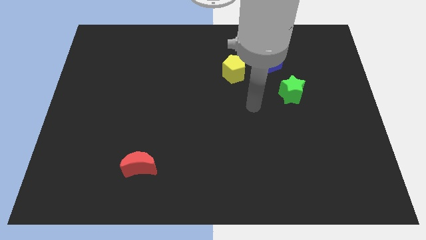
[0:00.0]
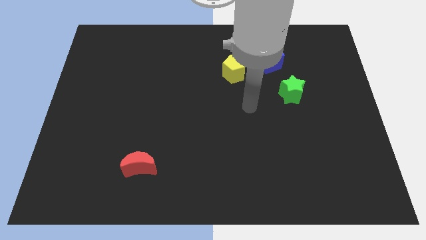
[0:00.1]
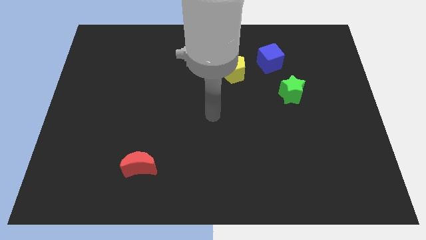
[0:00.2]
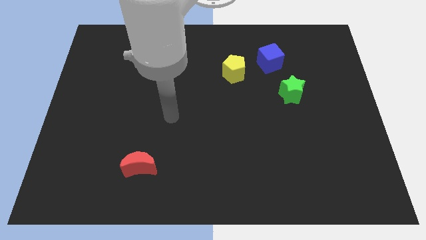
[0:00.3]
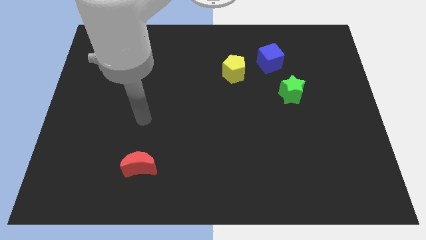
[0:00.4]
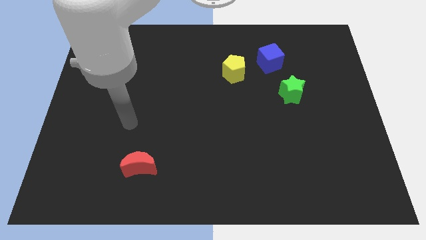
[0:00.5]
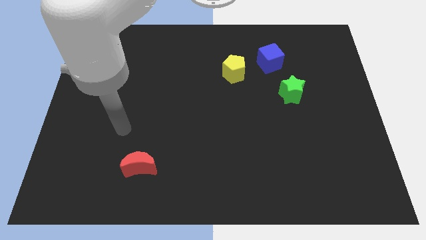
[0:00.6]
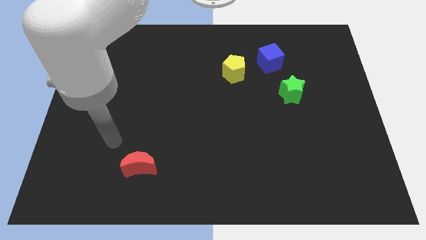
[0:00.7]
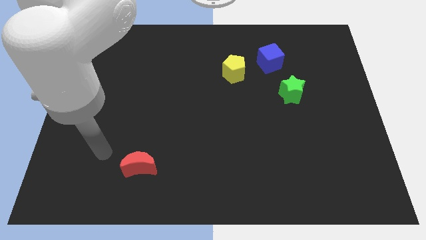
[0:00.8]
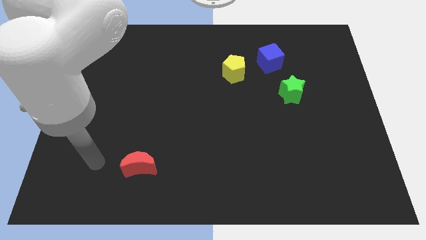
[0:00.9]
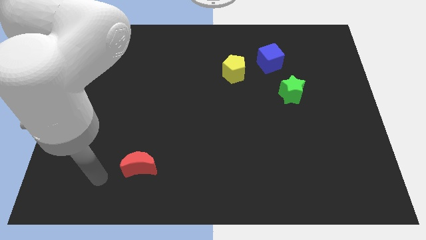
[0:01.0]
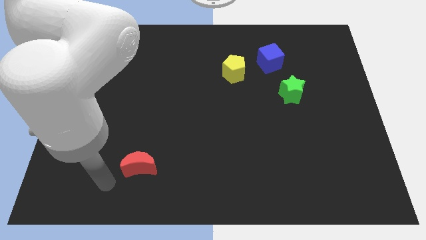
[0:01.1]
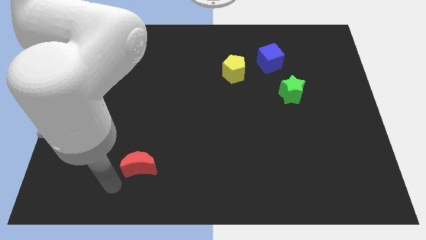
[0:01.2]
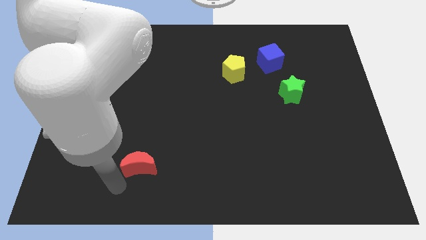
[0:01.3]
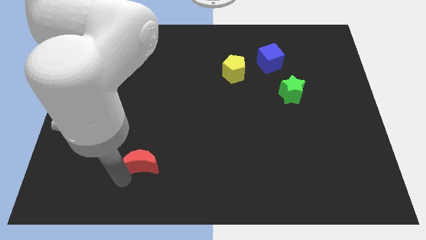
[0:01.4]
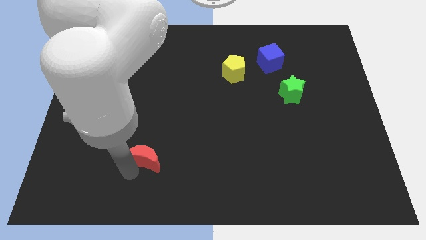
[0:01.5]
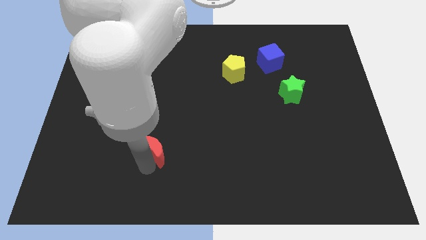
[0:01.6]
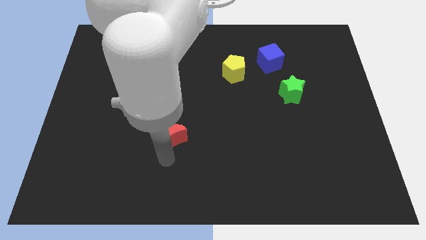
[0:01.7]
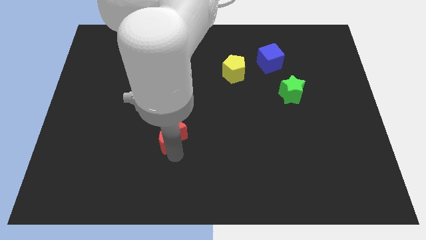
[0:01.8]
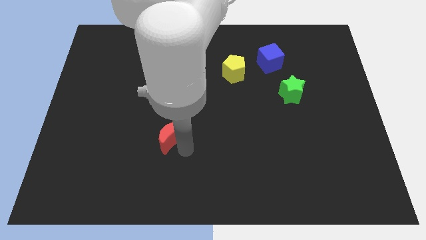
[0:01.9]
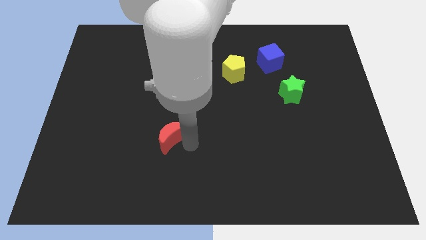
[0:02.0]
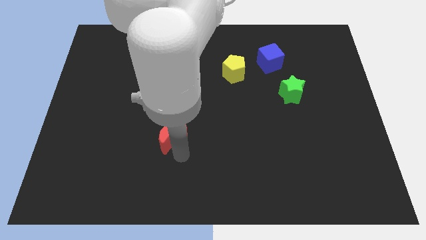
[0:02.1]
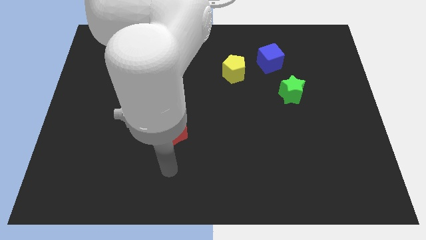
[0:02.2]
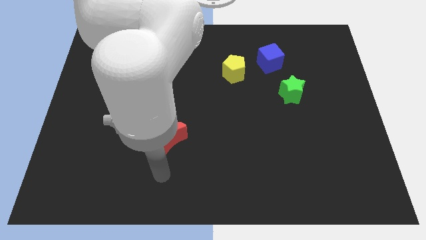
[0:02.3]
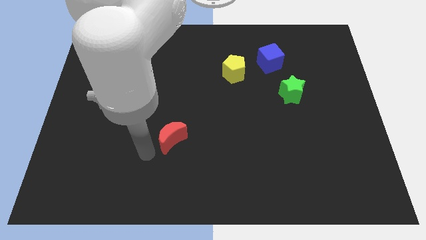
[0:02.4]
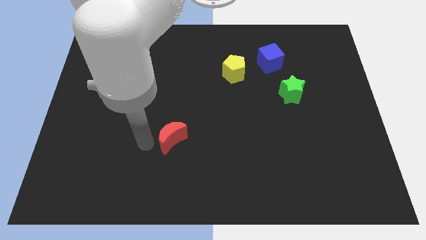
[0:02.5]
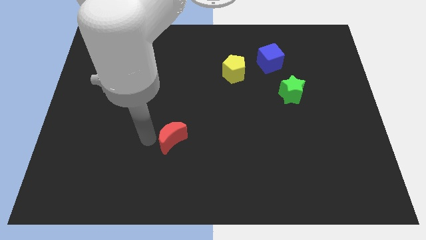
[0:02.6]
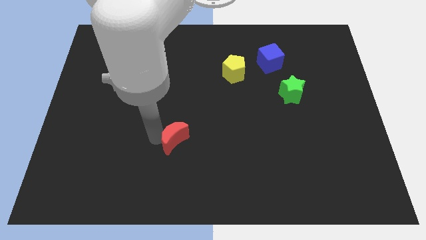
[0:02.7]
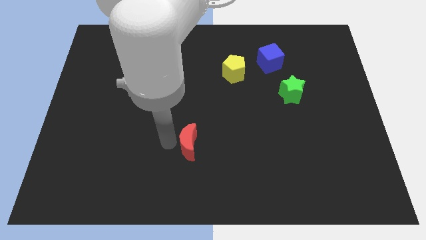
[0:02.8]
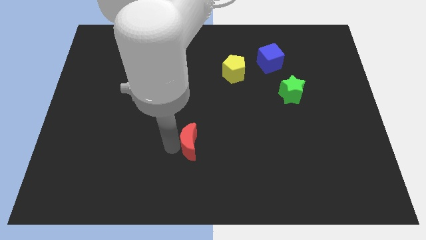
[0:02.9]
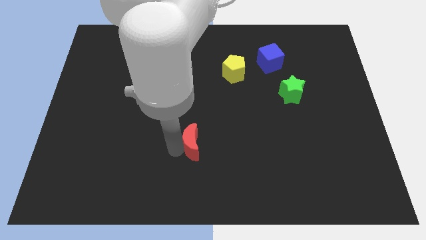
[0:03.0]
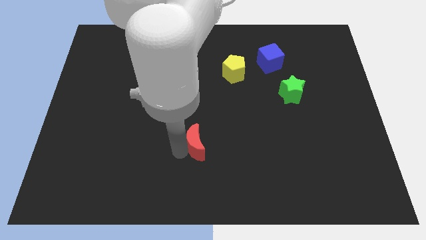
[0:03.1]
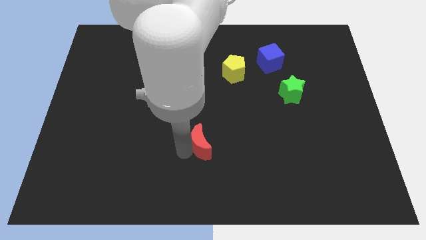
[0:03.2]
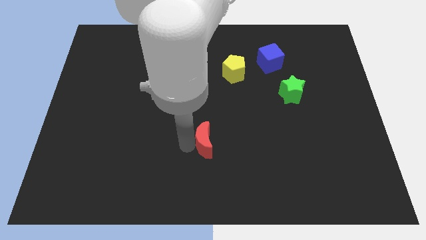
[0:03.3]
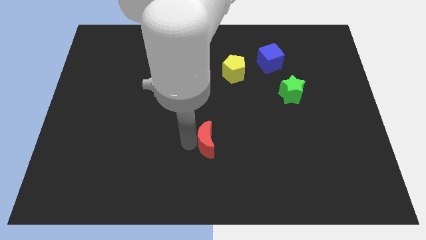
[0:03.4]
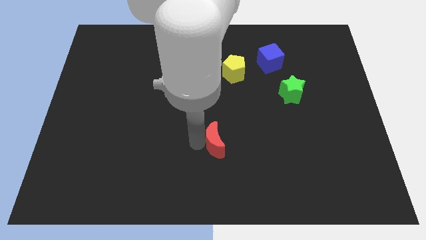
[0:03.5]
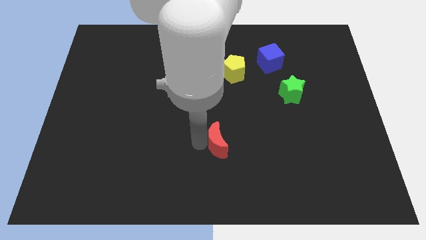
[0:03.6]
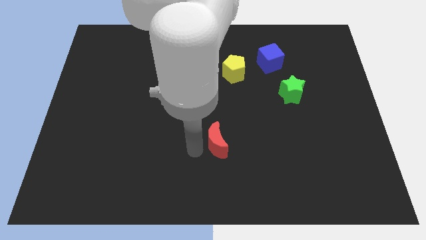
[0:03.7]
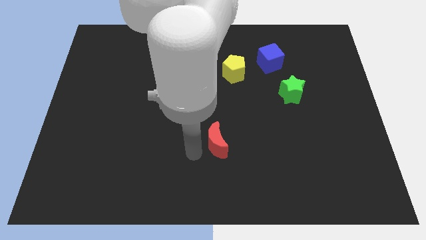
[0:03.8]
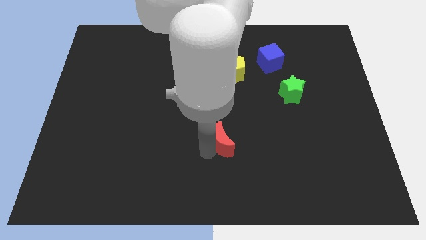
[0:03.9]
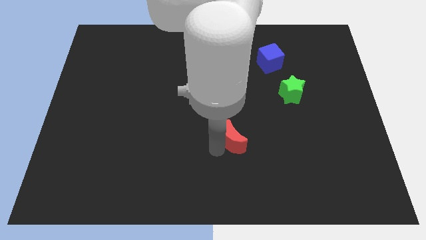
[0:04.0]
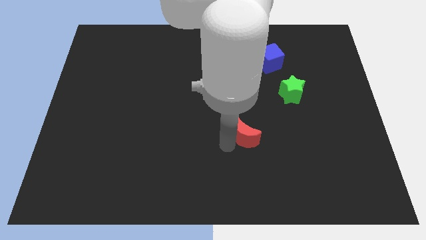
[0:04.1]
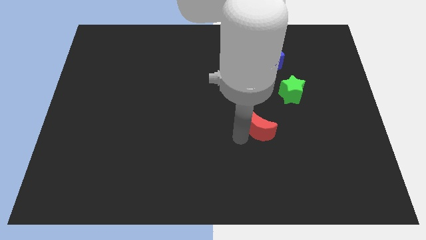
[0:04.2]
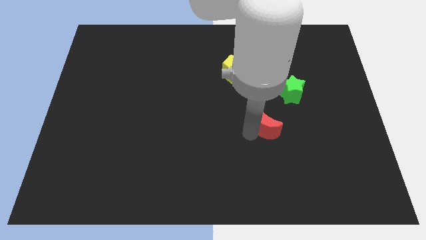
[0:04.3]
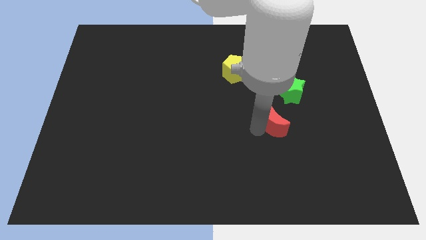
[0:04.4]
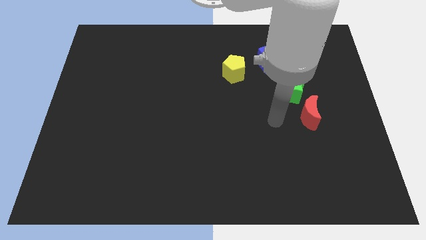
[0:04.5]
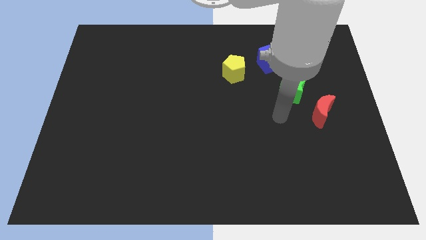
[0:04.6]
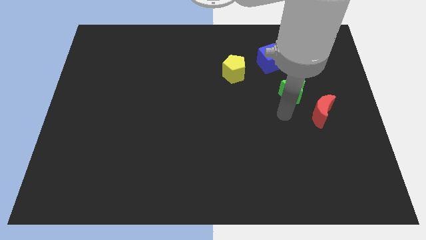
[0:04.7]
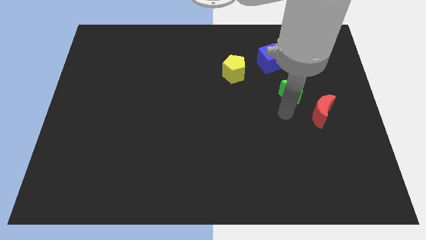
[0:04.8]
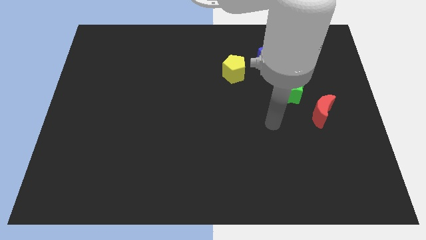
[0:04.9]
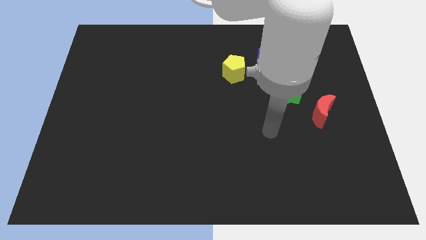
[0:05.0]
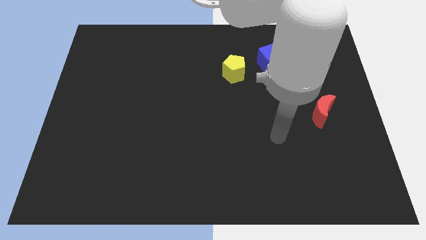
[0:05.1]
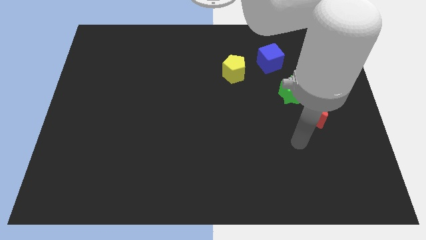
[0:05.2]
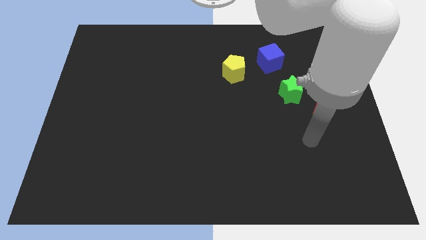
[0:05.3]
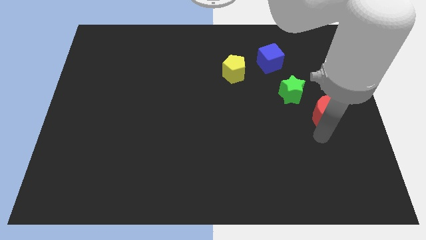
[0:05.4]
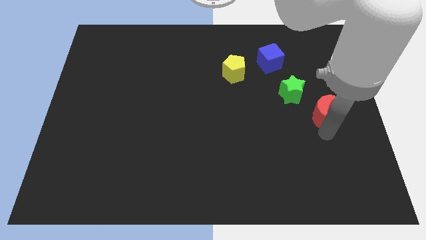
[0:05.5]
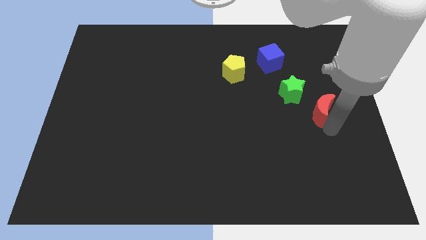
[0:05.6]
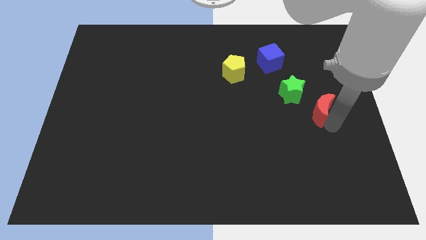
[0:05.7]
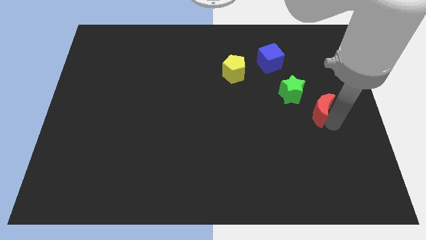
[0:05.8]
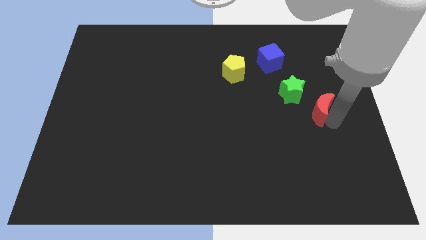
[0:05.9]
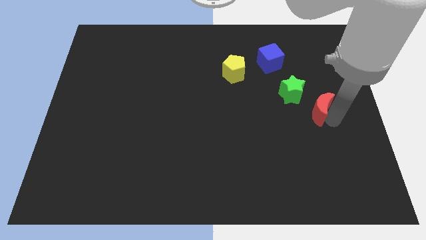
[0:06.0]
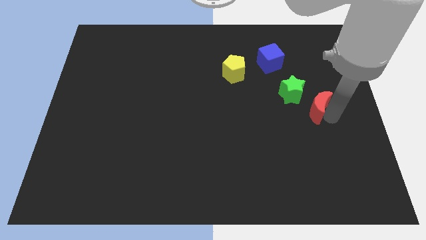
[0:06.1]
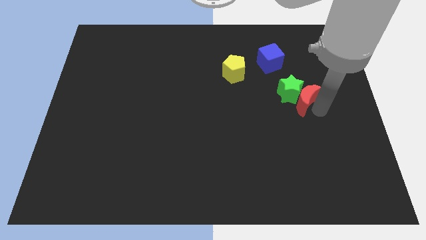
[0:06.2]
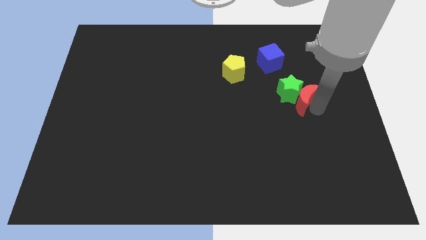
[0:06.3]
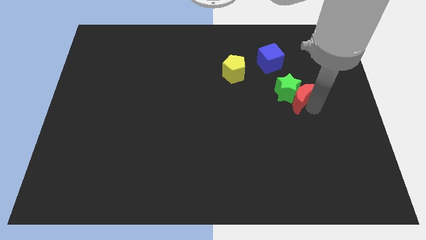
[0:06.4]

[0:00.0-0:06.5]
put the moon close to the green star

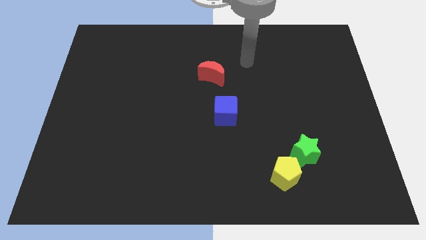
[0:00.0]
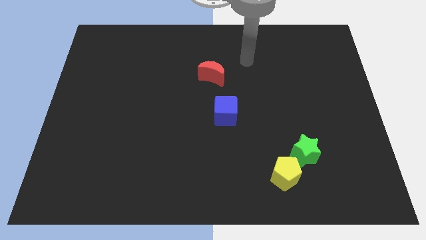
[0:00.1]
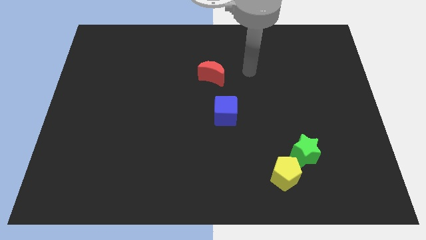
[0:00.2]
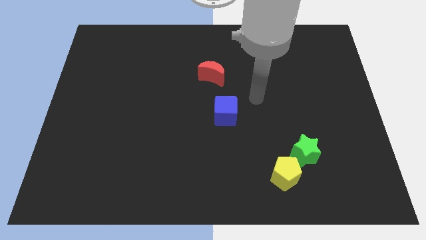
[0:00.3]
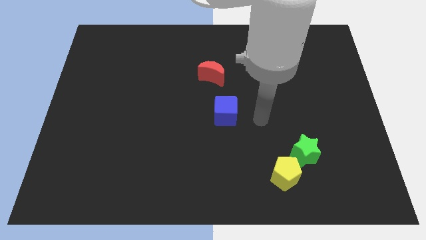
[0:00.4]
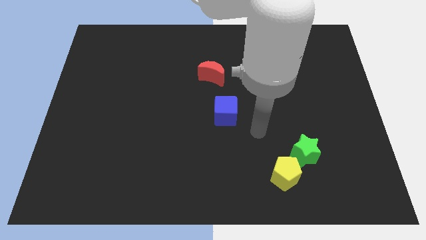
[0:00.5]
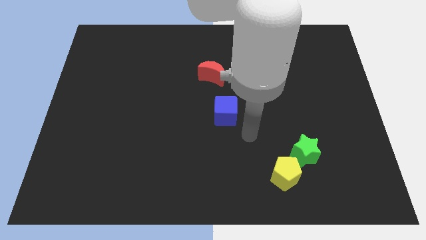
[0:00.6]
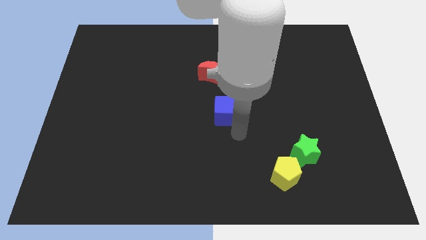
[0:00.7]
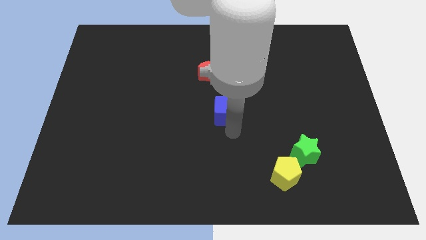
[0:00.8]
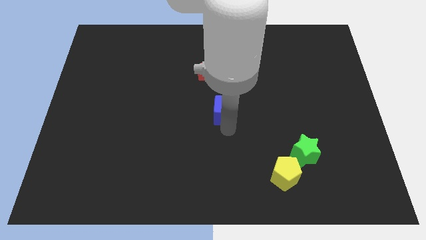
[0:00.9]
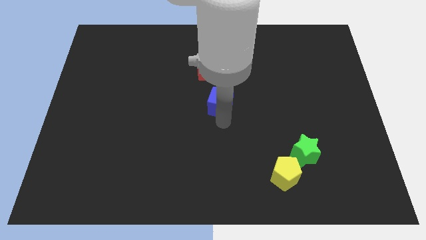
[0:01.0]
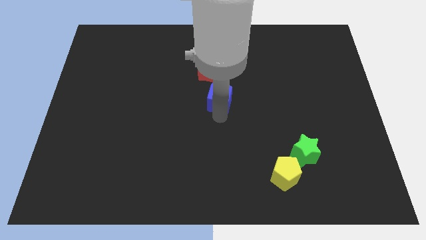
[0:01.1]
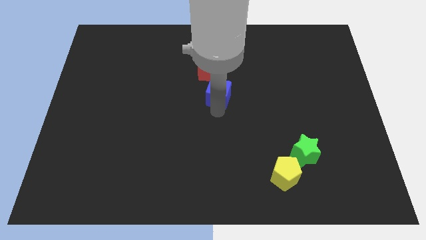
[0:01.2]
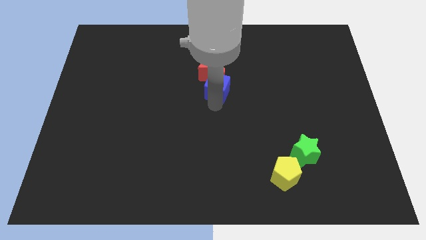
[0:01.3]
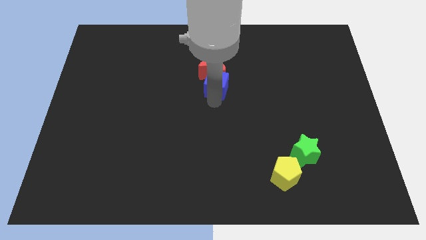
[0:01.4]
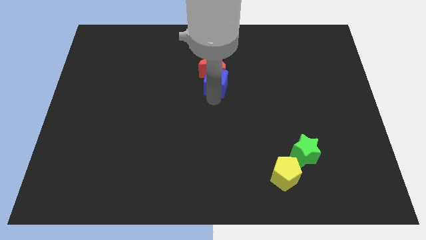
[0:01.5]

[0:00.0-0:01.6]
move the cube towards the moon

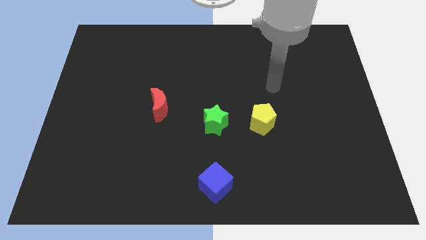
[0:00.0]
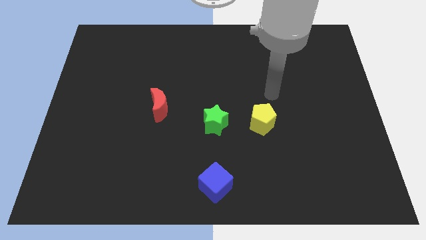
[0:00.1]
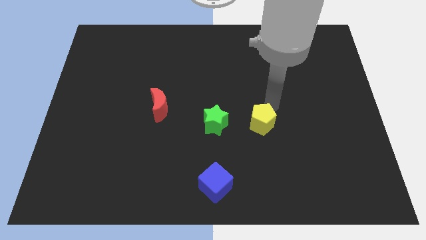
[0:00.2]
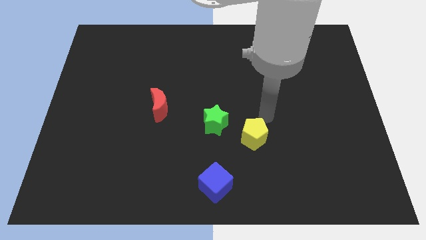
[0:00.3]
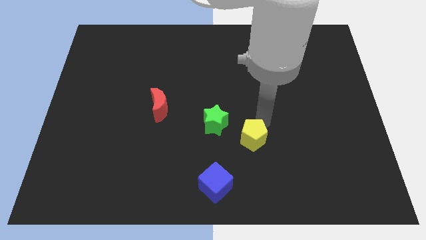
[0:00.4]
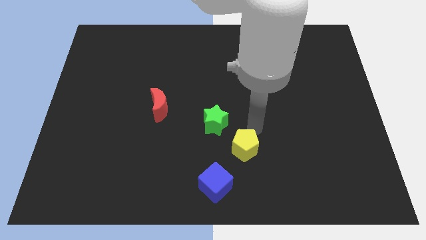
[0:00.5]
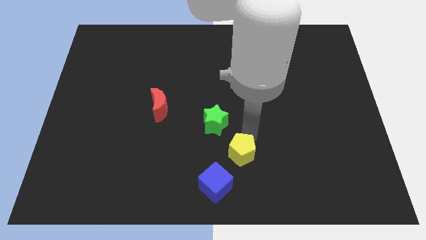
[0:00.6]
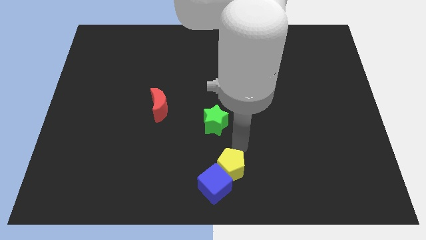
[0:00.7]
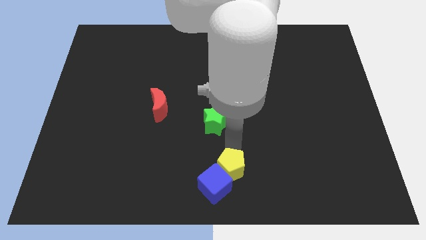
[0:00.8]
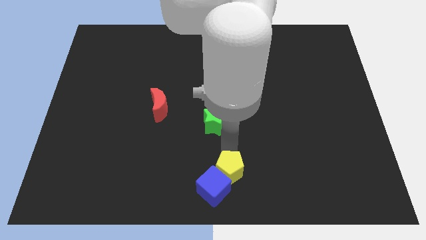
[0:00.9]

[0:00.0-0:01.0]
move the pentagon towards the blue cube
